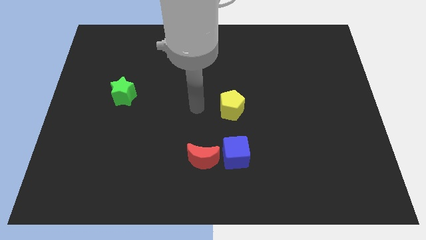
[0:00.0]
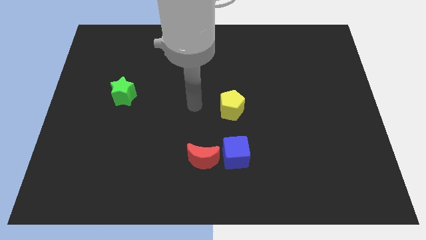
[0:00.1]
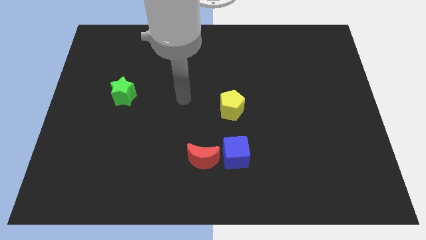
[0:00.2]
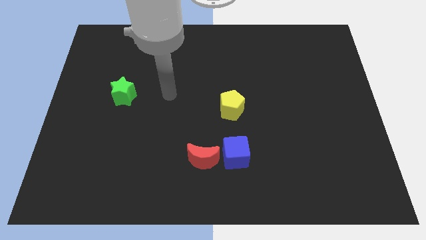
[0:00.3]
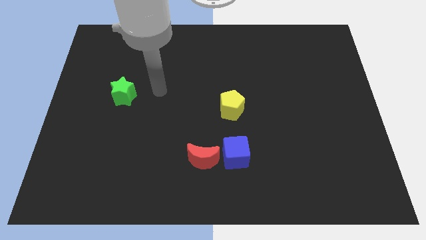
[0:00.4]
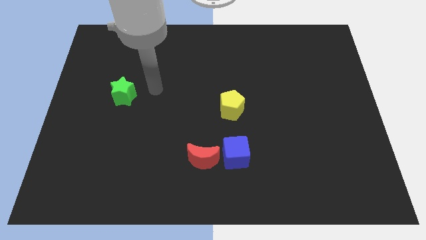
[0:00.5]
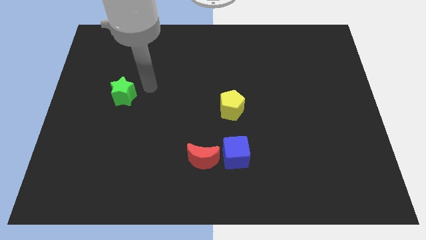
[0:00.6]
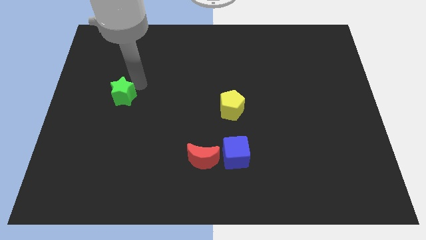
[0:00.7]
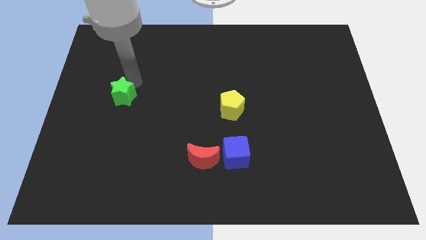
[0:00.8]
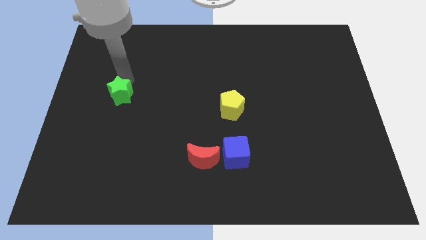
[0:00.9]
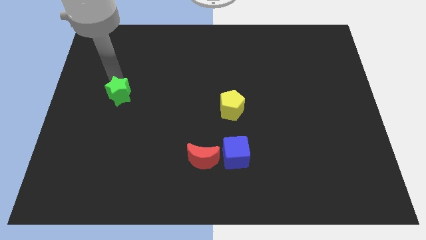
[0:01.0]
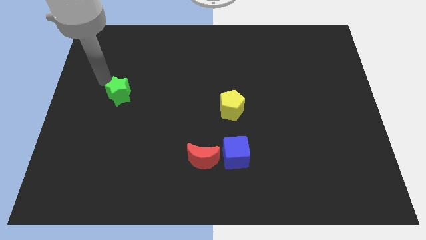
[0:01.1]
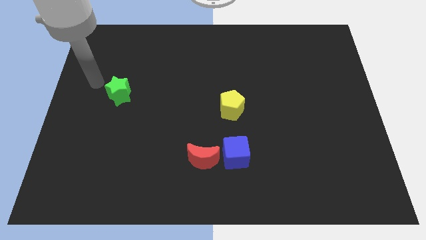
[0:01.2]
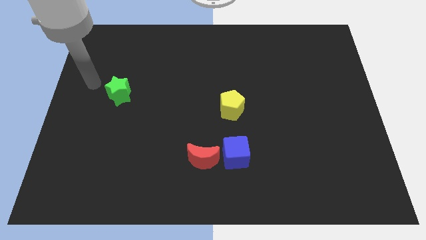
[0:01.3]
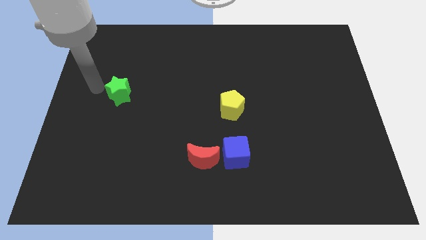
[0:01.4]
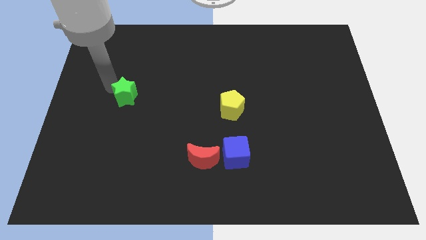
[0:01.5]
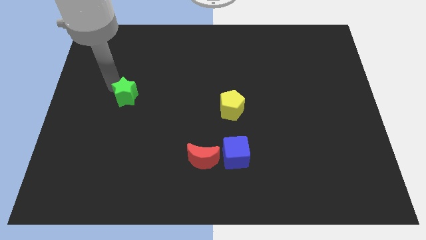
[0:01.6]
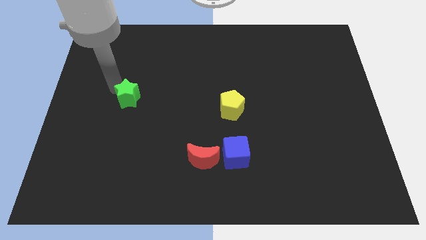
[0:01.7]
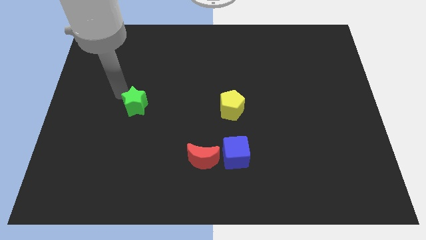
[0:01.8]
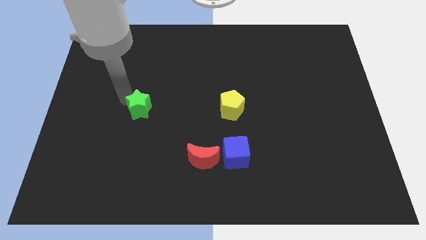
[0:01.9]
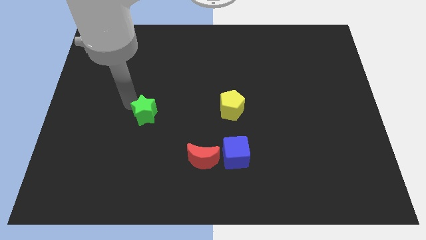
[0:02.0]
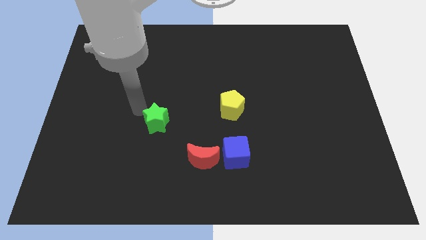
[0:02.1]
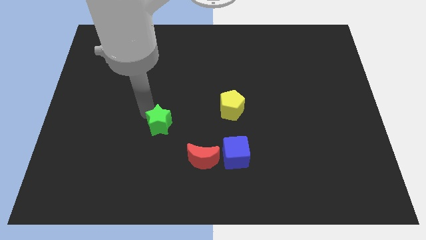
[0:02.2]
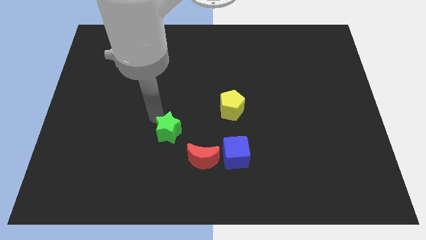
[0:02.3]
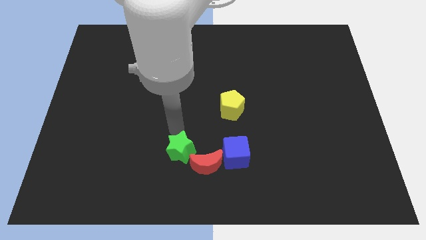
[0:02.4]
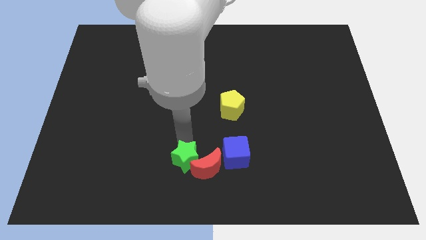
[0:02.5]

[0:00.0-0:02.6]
push the green block close to the red block

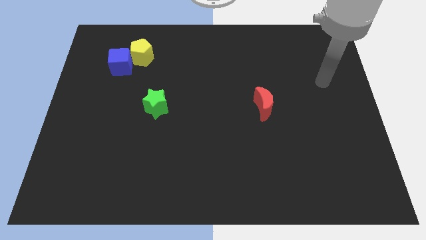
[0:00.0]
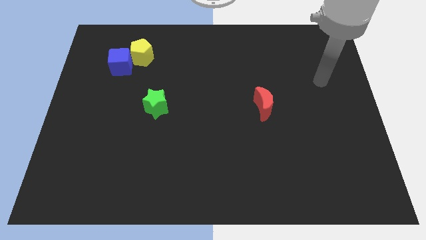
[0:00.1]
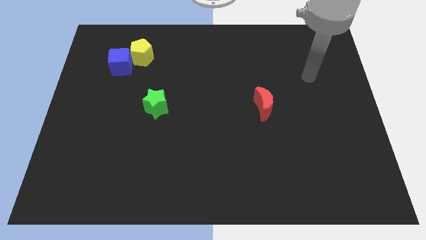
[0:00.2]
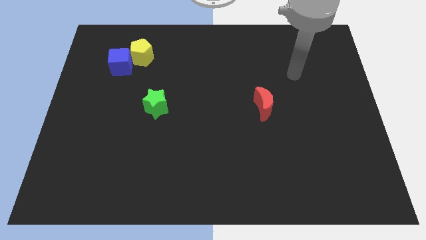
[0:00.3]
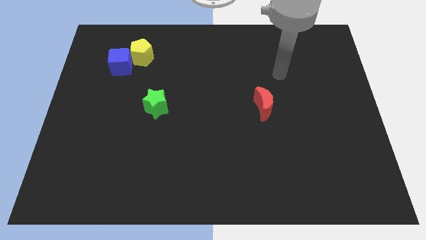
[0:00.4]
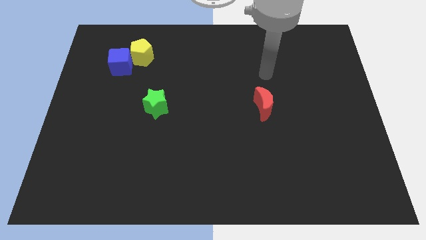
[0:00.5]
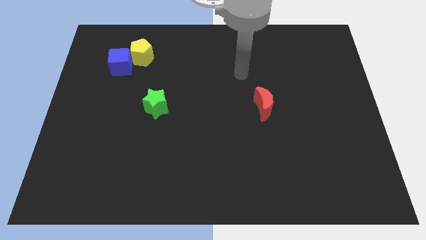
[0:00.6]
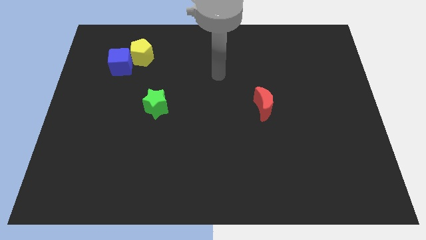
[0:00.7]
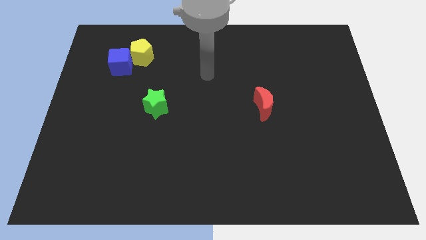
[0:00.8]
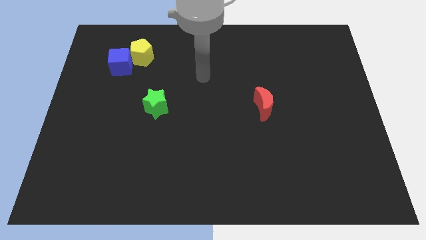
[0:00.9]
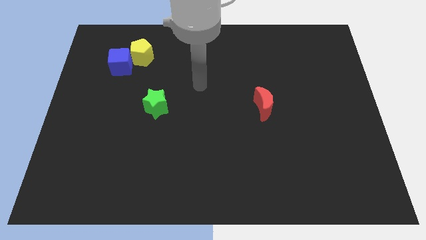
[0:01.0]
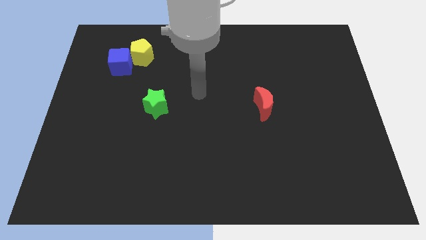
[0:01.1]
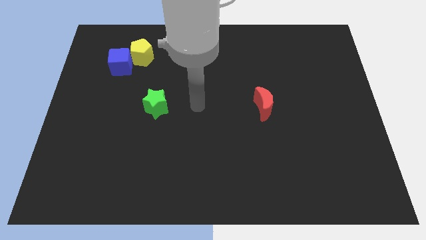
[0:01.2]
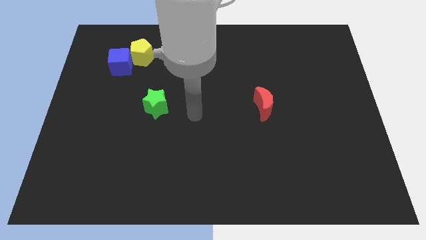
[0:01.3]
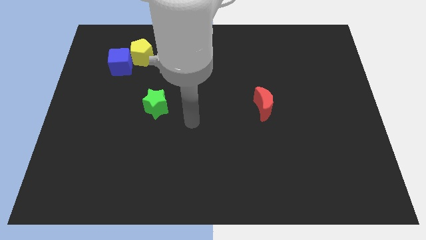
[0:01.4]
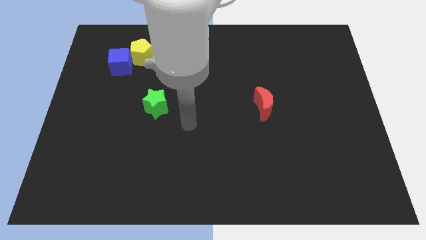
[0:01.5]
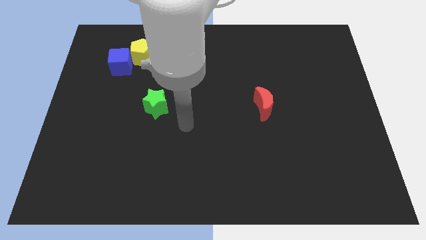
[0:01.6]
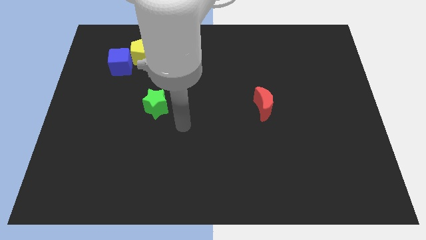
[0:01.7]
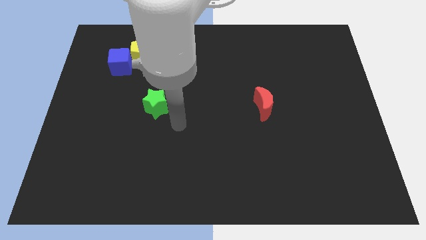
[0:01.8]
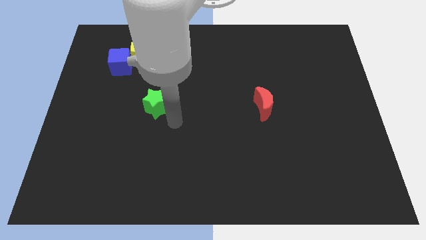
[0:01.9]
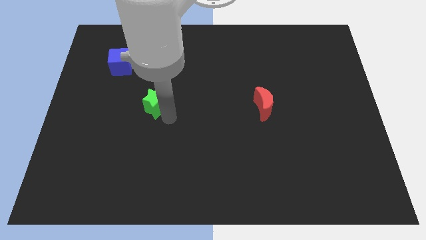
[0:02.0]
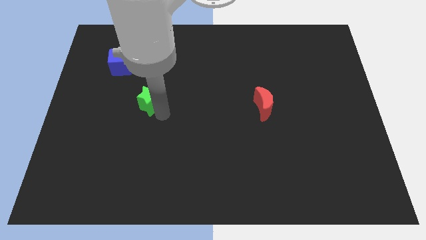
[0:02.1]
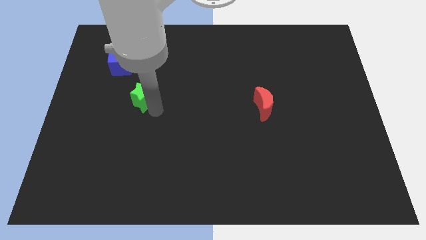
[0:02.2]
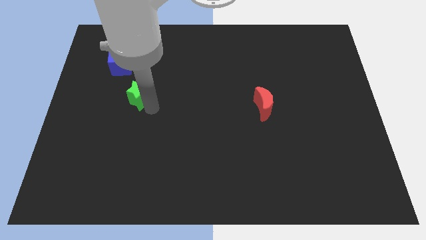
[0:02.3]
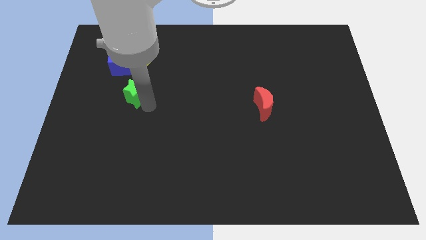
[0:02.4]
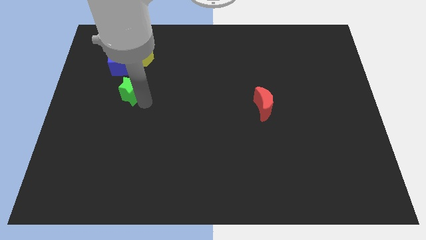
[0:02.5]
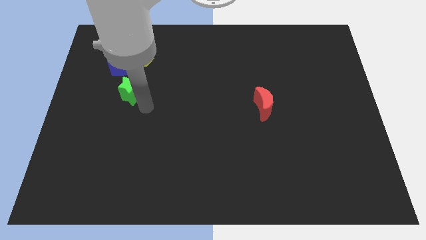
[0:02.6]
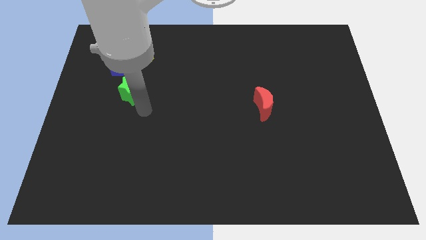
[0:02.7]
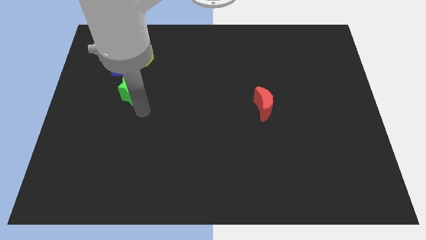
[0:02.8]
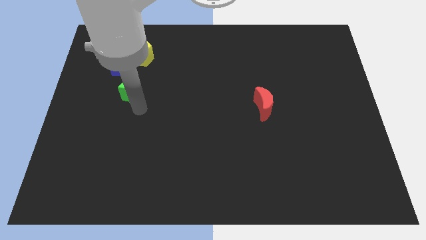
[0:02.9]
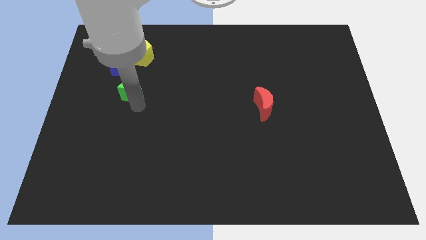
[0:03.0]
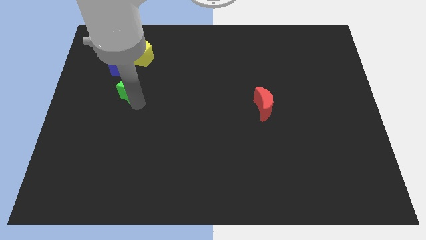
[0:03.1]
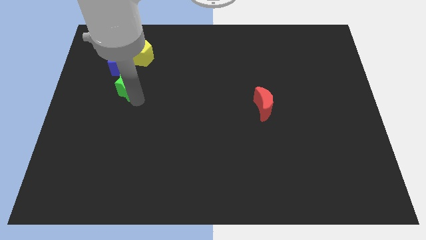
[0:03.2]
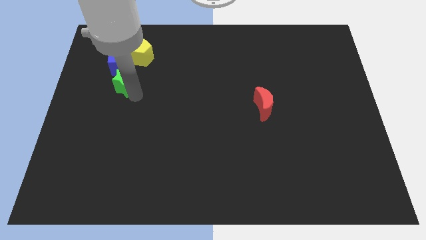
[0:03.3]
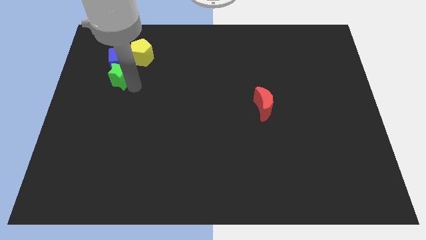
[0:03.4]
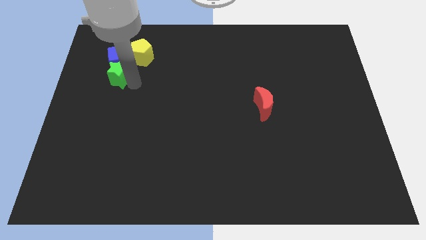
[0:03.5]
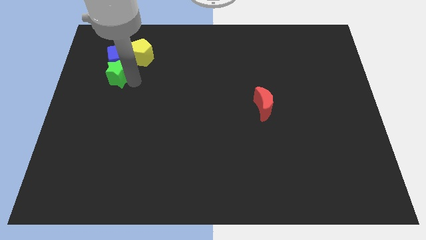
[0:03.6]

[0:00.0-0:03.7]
slide the green star next to the cube

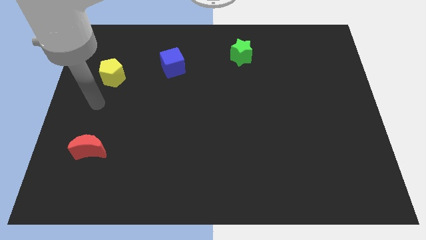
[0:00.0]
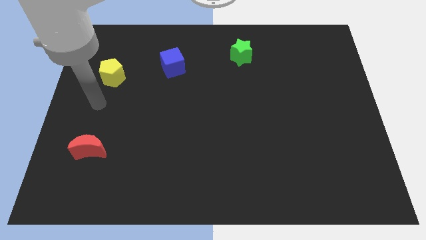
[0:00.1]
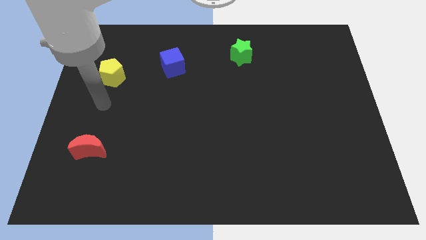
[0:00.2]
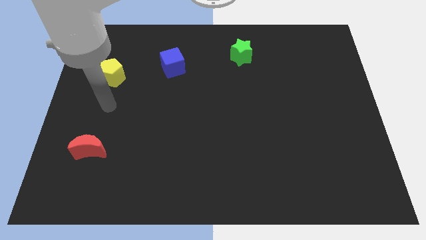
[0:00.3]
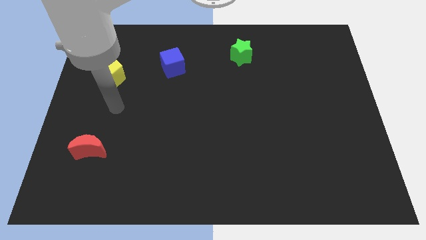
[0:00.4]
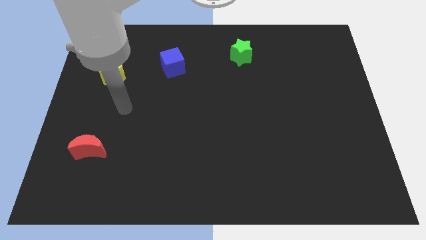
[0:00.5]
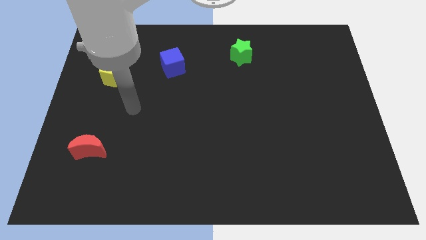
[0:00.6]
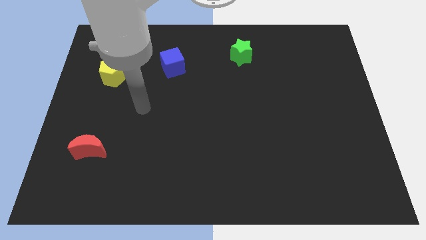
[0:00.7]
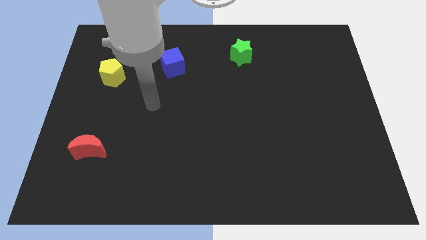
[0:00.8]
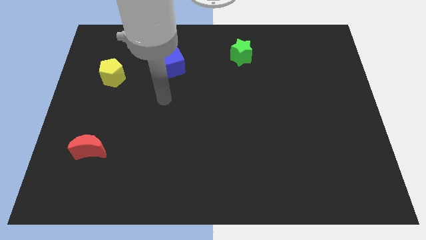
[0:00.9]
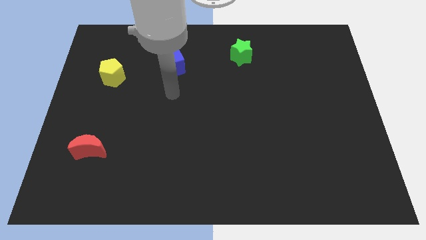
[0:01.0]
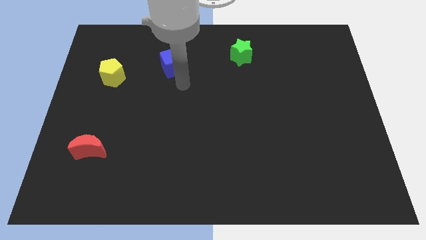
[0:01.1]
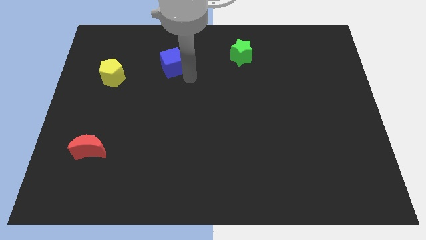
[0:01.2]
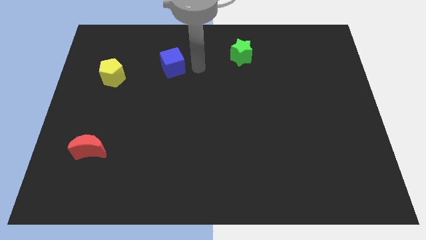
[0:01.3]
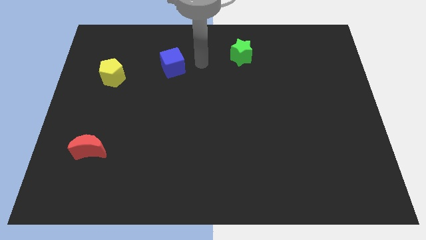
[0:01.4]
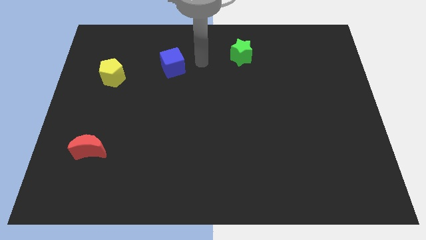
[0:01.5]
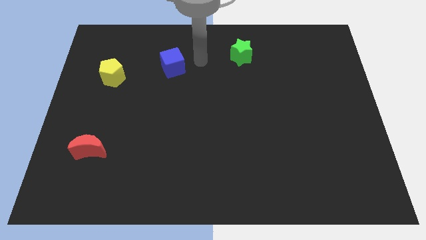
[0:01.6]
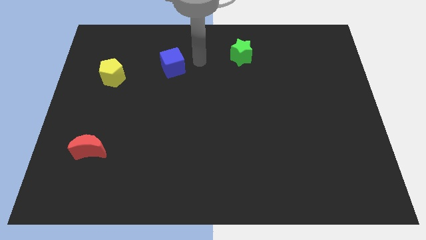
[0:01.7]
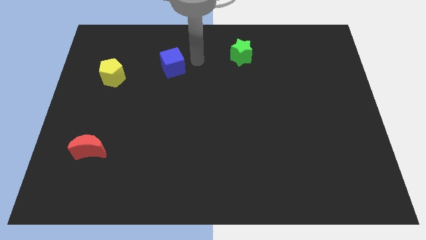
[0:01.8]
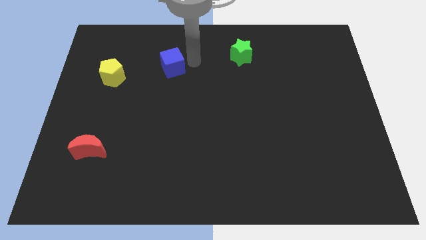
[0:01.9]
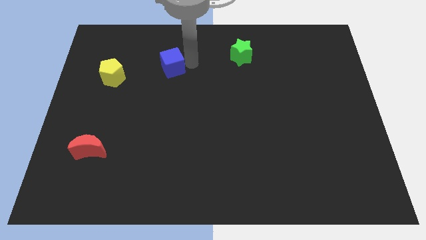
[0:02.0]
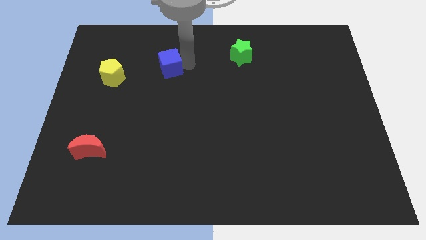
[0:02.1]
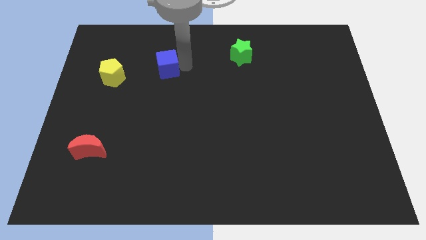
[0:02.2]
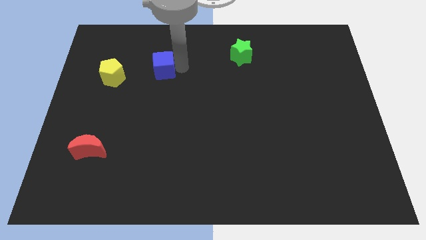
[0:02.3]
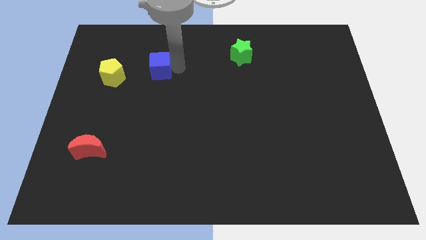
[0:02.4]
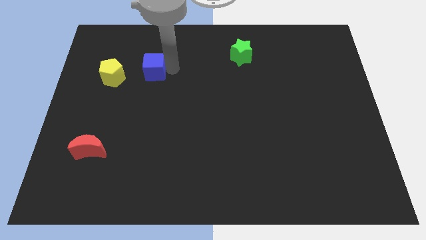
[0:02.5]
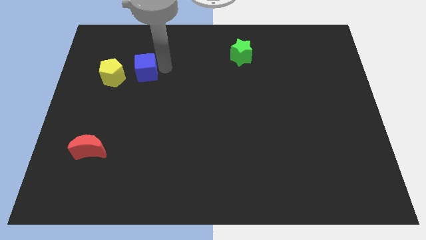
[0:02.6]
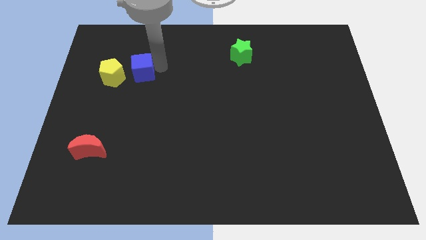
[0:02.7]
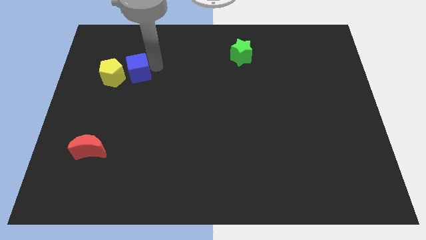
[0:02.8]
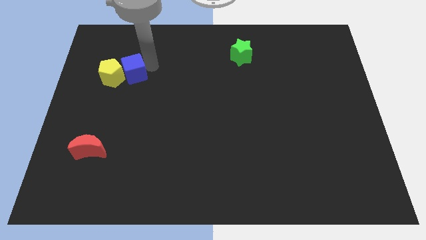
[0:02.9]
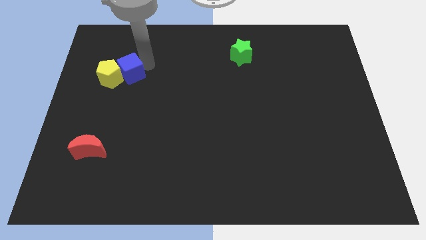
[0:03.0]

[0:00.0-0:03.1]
slide the blue block to the yellow block
